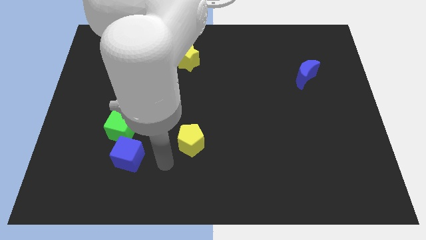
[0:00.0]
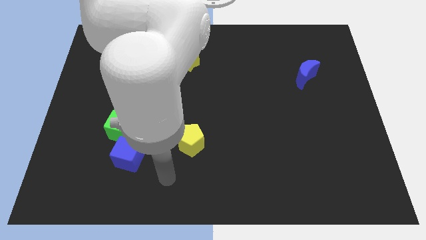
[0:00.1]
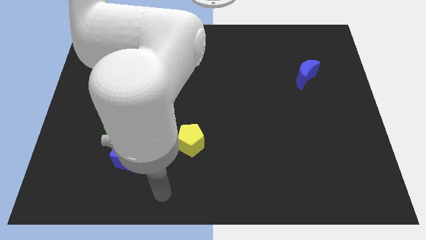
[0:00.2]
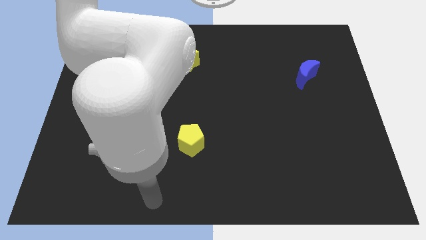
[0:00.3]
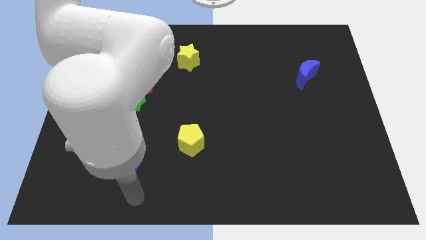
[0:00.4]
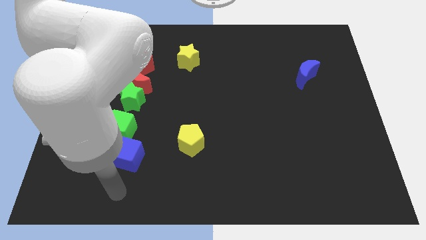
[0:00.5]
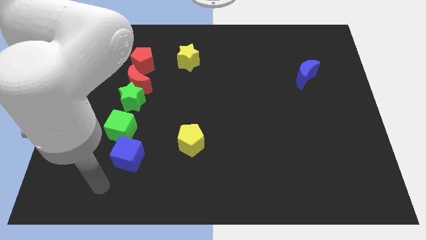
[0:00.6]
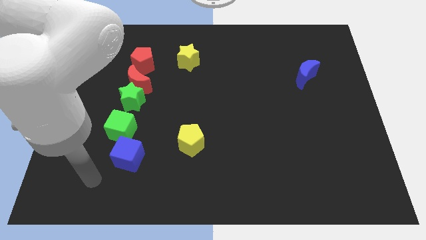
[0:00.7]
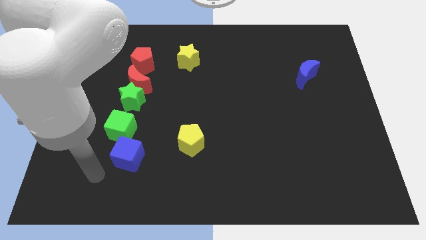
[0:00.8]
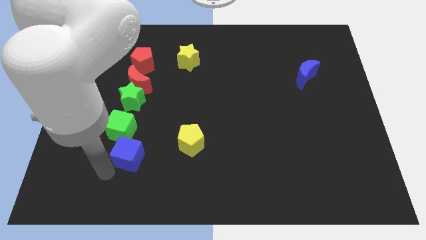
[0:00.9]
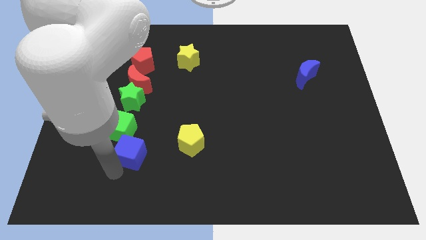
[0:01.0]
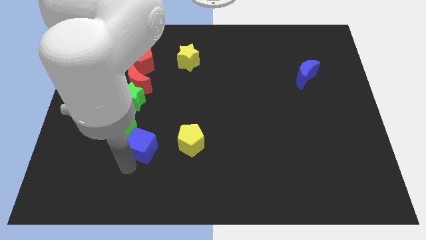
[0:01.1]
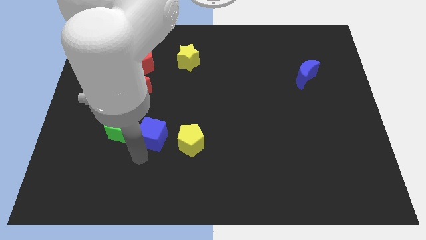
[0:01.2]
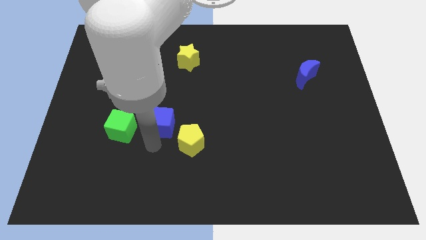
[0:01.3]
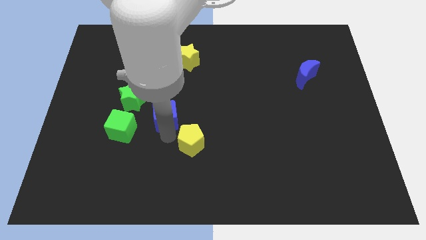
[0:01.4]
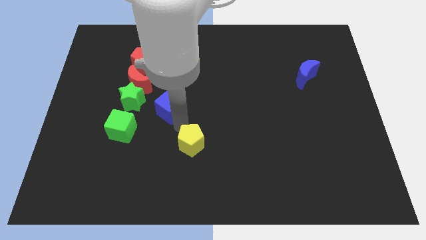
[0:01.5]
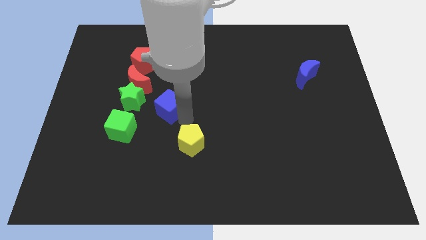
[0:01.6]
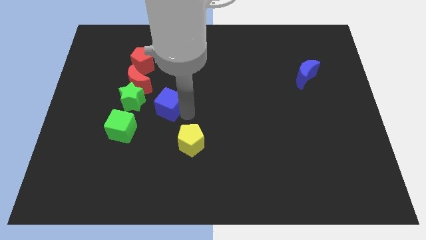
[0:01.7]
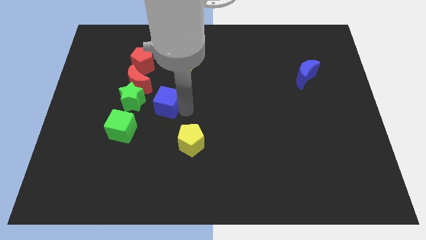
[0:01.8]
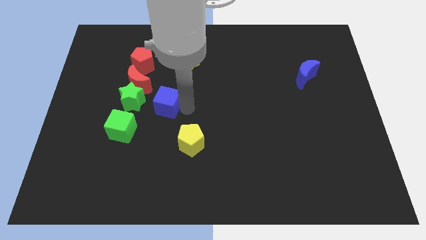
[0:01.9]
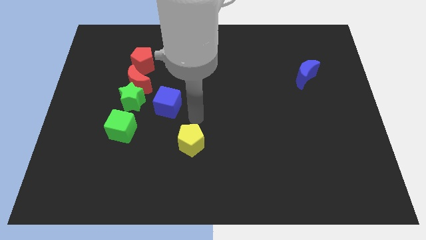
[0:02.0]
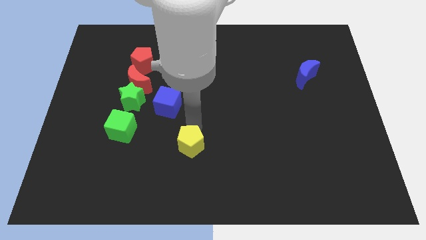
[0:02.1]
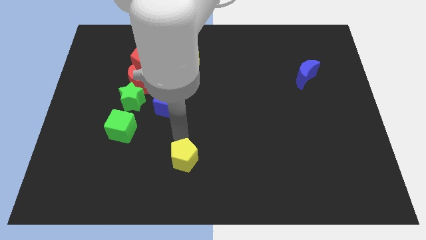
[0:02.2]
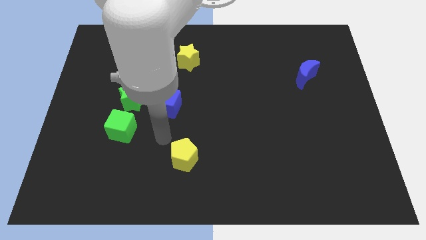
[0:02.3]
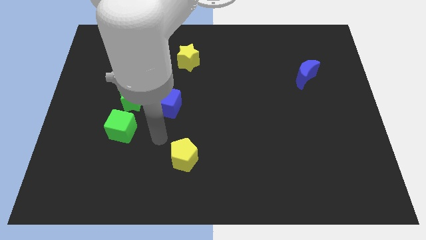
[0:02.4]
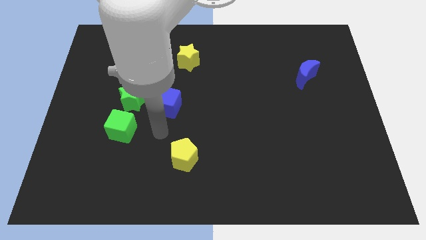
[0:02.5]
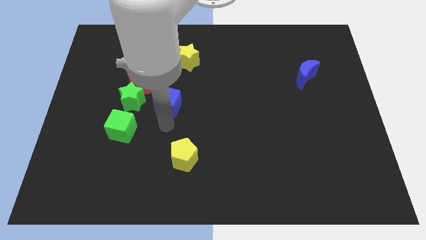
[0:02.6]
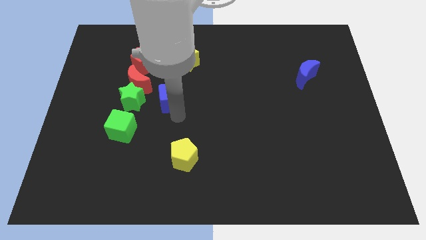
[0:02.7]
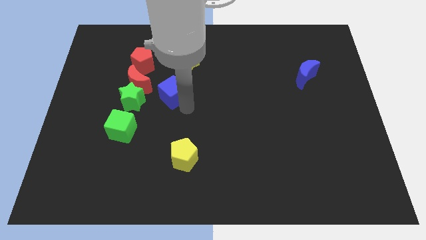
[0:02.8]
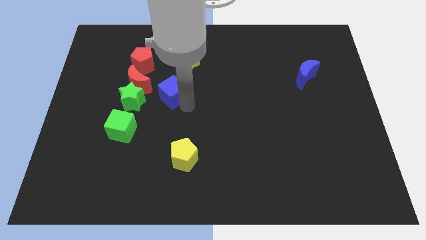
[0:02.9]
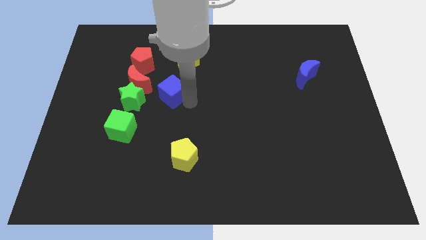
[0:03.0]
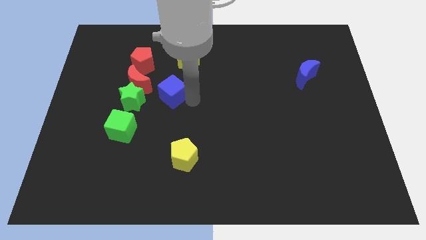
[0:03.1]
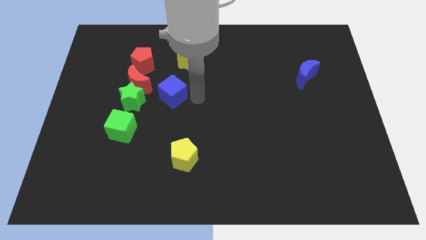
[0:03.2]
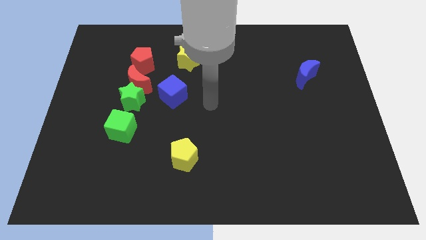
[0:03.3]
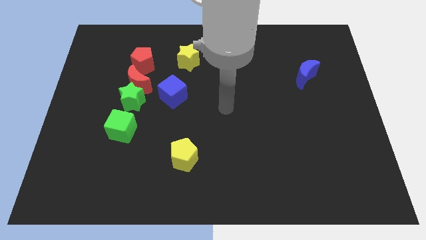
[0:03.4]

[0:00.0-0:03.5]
slide the blue cube to the right side of the green star

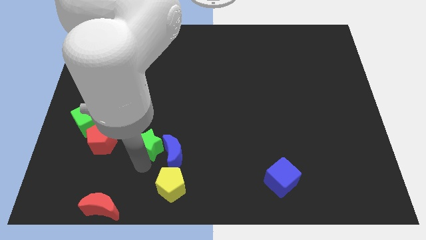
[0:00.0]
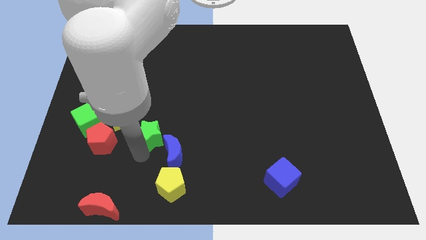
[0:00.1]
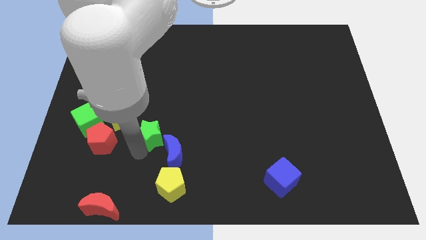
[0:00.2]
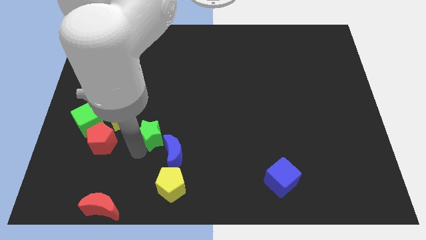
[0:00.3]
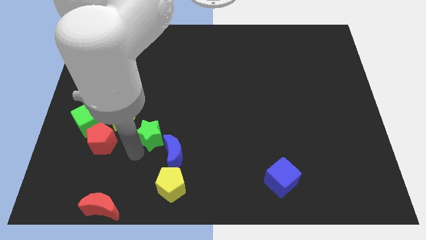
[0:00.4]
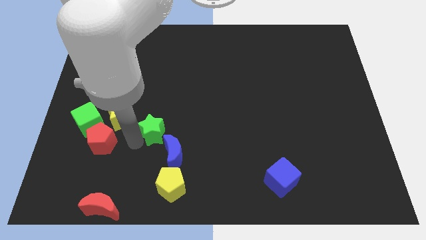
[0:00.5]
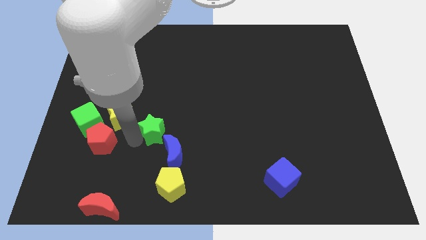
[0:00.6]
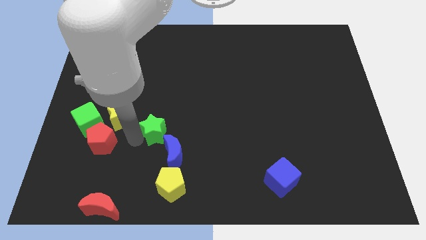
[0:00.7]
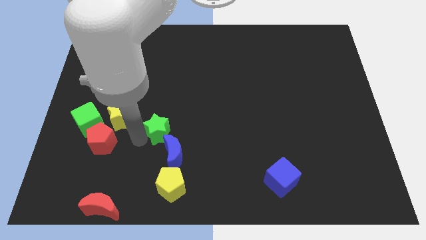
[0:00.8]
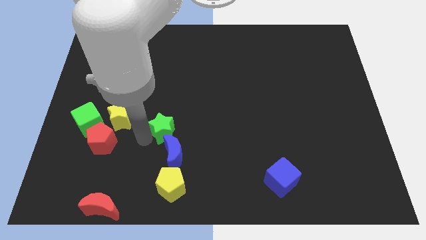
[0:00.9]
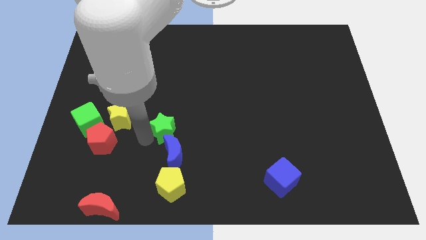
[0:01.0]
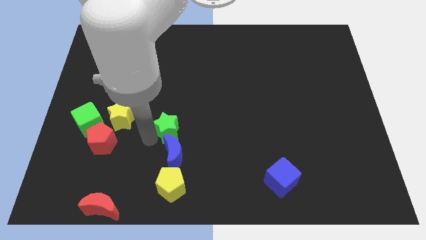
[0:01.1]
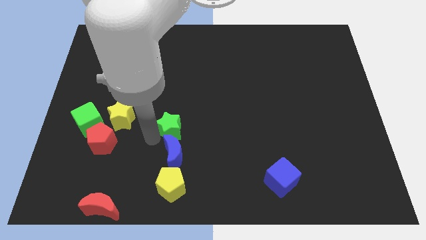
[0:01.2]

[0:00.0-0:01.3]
push the green star to the top of the blue crescent

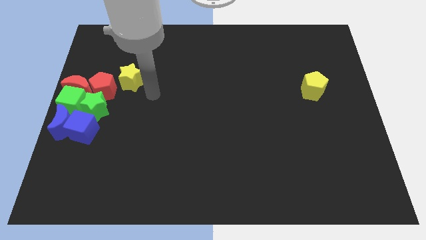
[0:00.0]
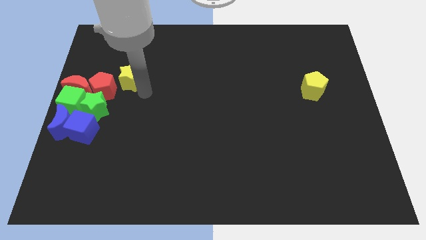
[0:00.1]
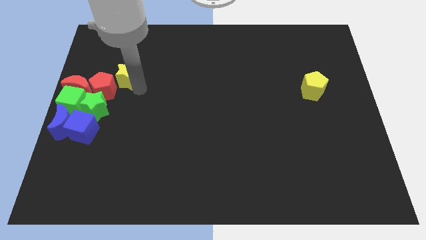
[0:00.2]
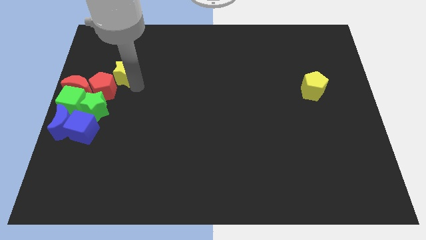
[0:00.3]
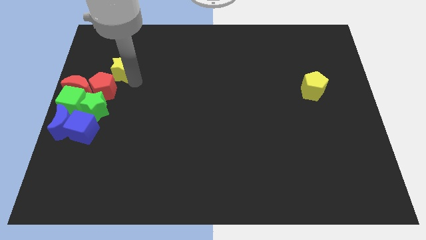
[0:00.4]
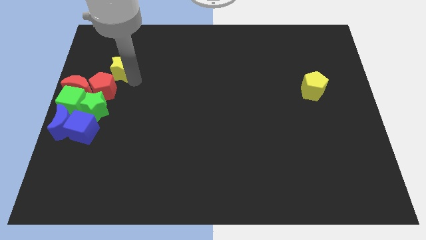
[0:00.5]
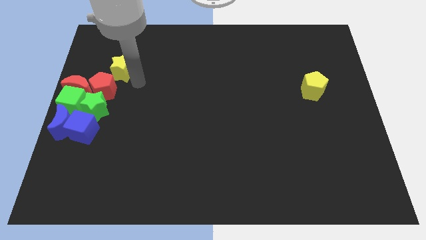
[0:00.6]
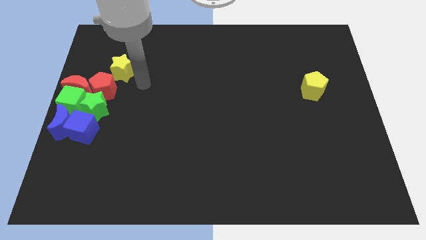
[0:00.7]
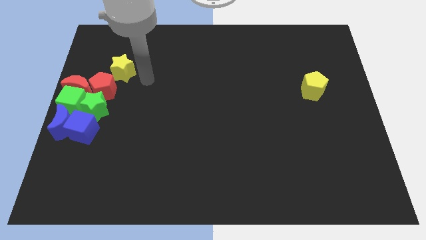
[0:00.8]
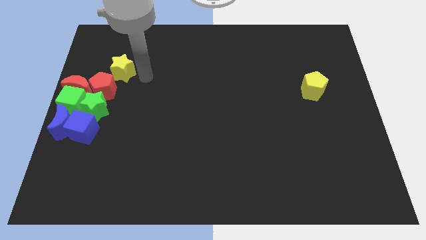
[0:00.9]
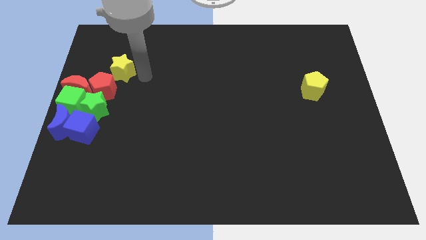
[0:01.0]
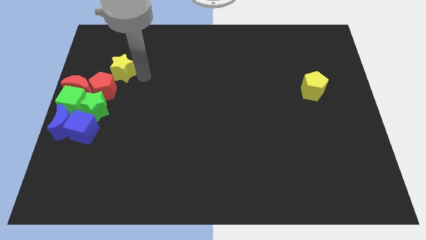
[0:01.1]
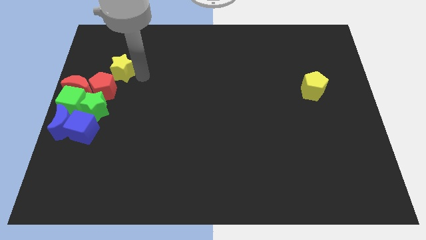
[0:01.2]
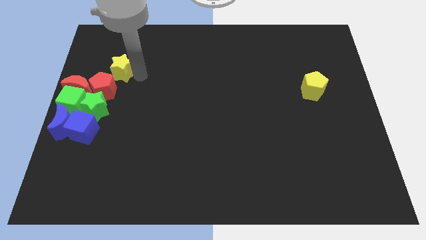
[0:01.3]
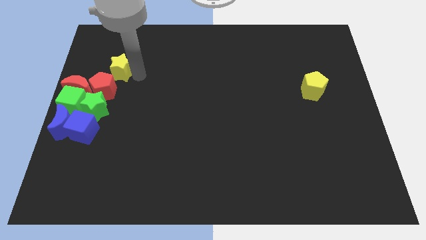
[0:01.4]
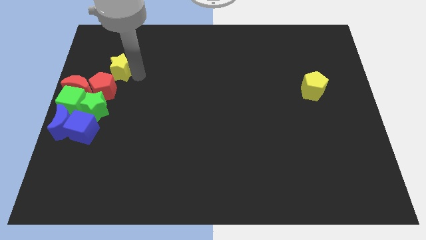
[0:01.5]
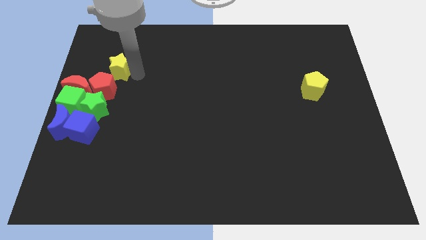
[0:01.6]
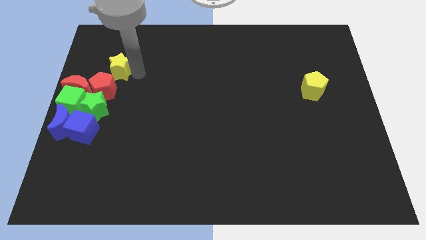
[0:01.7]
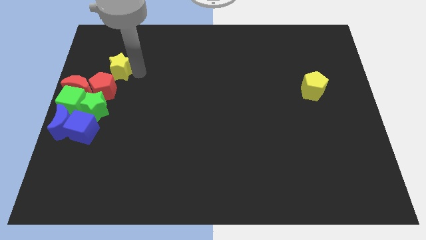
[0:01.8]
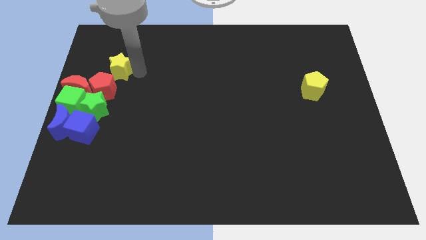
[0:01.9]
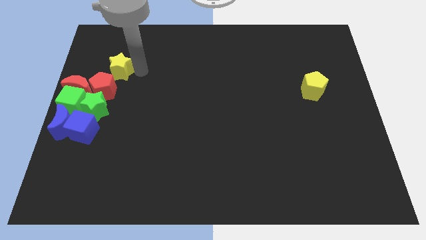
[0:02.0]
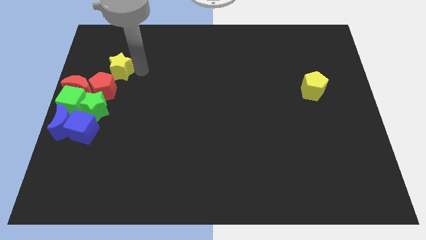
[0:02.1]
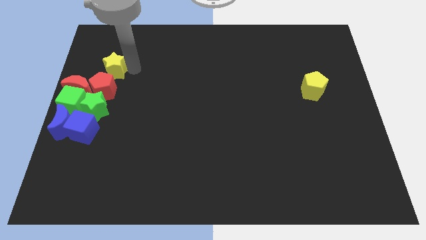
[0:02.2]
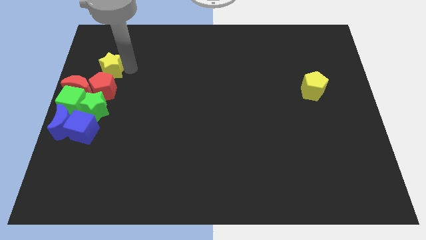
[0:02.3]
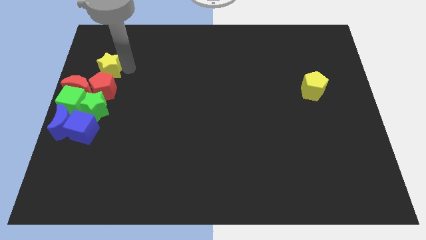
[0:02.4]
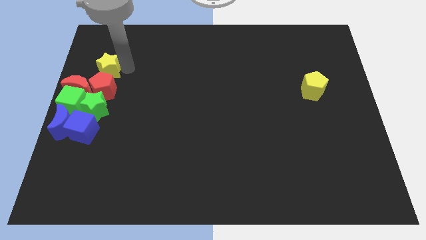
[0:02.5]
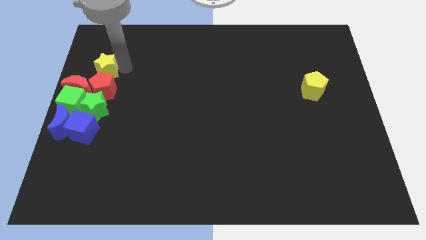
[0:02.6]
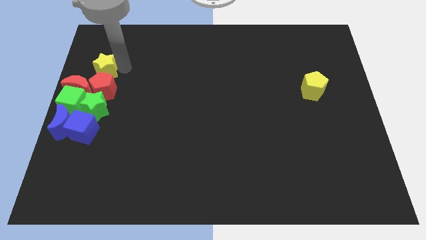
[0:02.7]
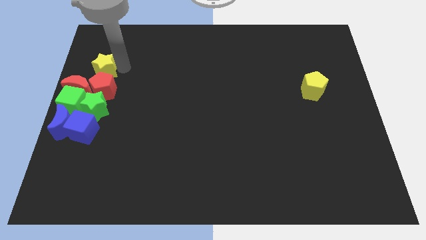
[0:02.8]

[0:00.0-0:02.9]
move the yellow star to the top of the red pentagon

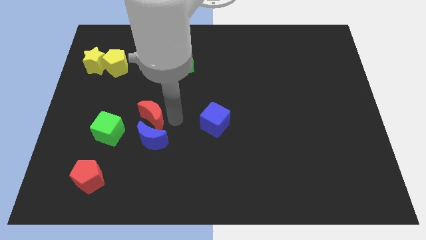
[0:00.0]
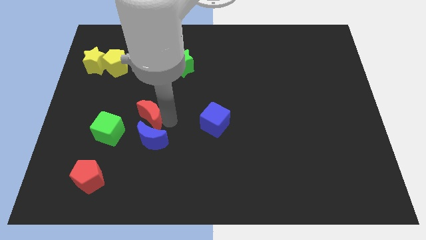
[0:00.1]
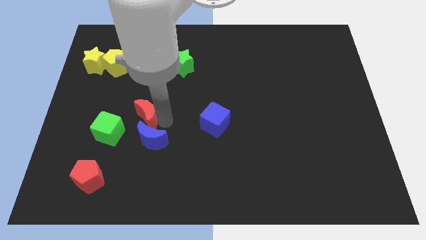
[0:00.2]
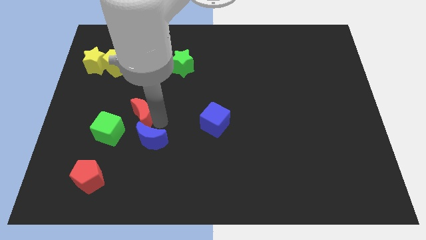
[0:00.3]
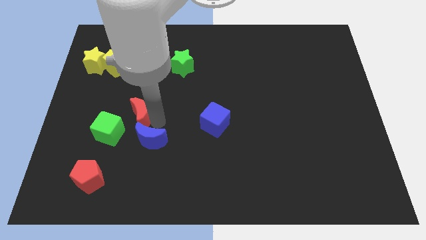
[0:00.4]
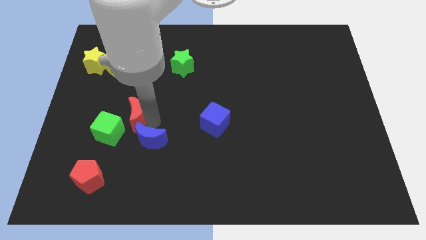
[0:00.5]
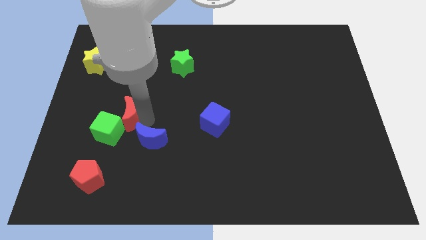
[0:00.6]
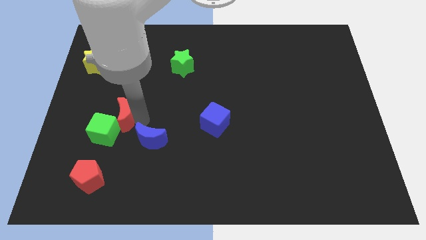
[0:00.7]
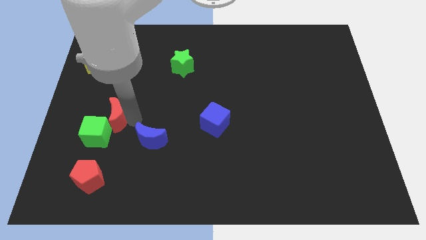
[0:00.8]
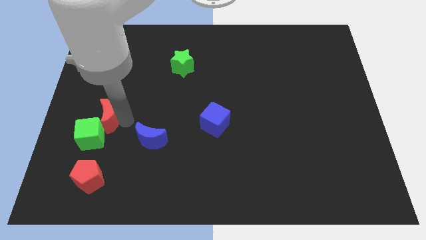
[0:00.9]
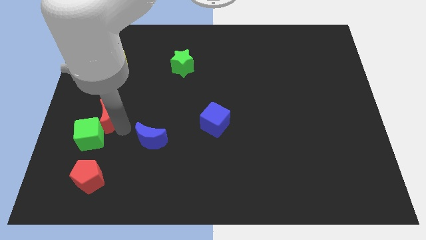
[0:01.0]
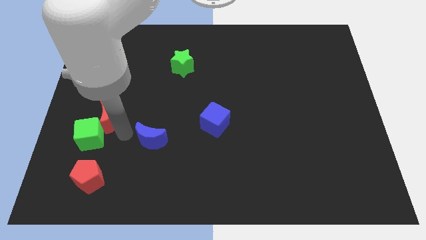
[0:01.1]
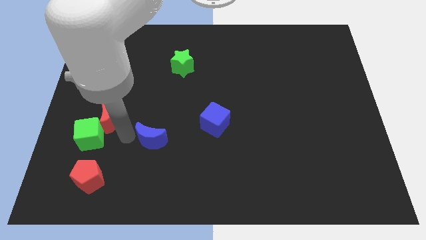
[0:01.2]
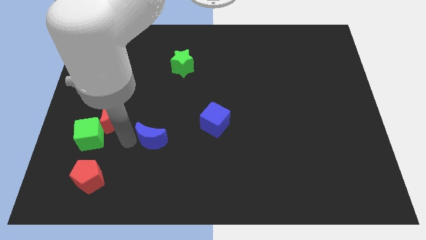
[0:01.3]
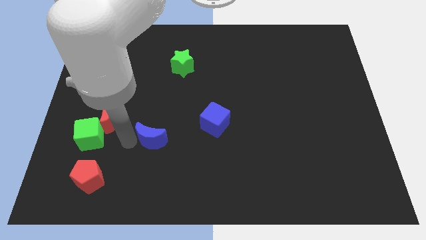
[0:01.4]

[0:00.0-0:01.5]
move red moon close to the green cube
